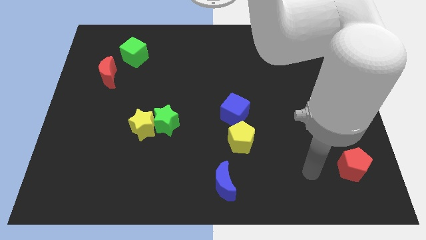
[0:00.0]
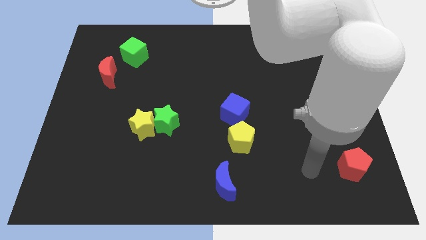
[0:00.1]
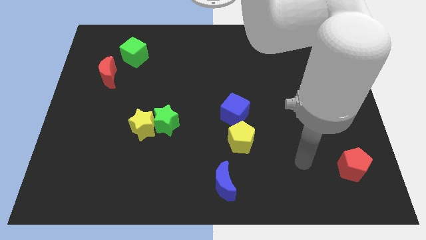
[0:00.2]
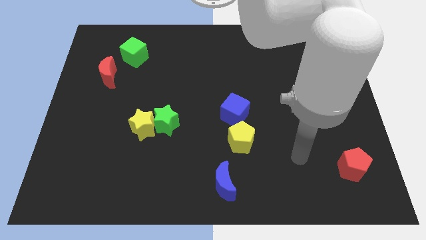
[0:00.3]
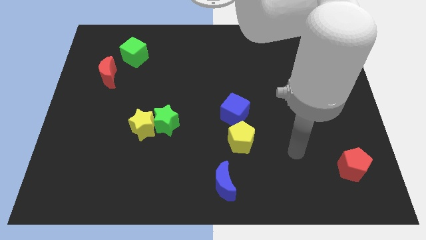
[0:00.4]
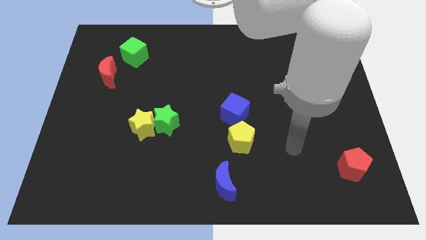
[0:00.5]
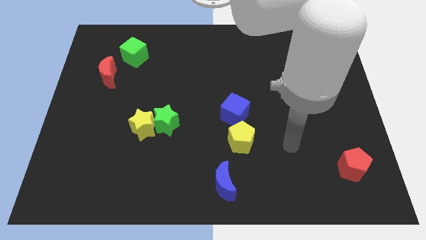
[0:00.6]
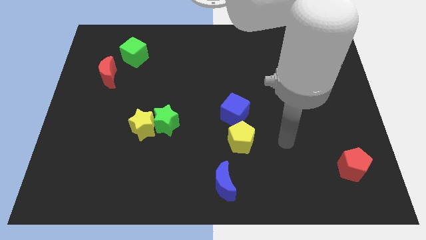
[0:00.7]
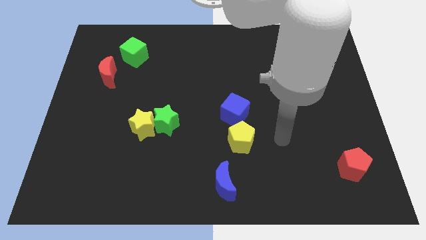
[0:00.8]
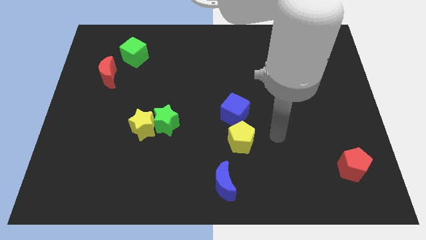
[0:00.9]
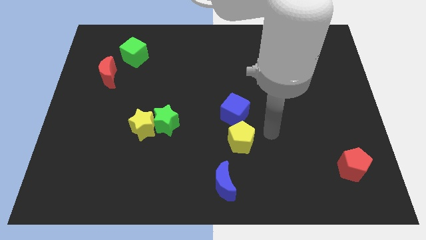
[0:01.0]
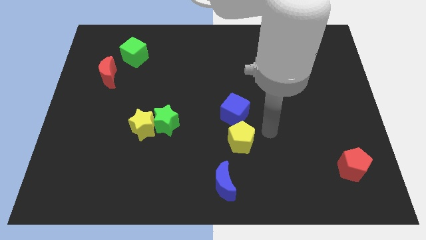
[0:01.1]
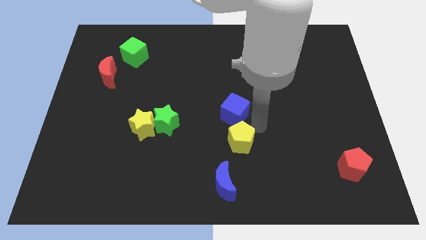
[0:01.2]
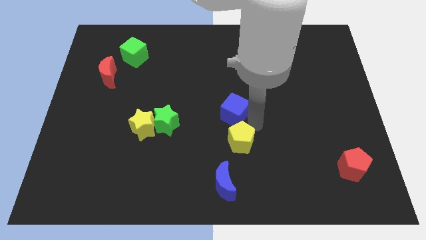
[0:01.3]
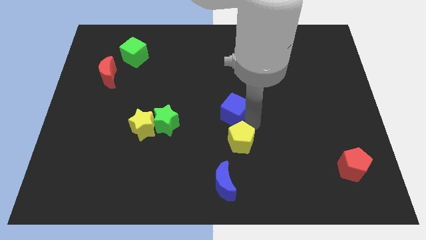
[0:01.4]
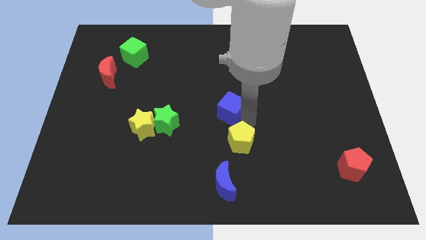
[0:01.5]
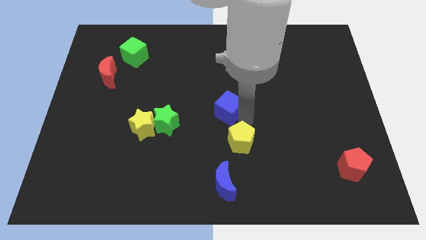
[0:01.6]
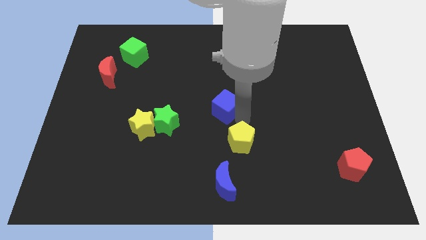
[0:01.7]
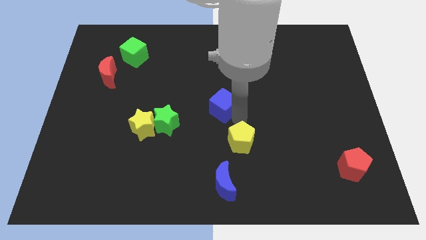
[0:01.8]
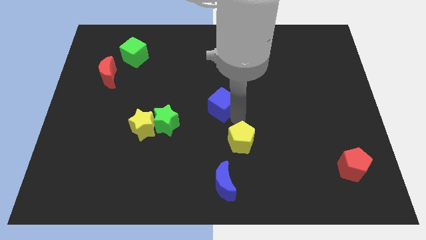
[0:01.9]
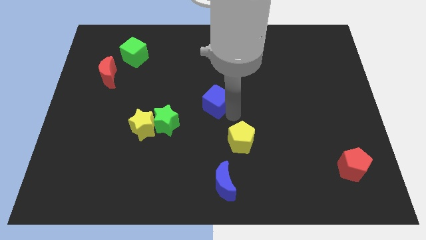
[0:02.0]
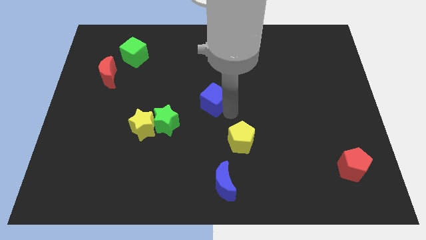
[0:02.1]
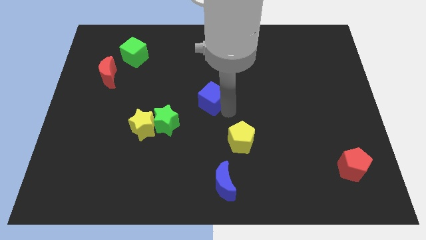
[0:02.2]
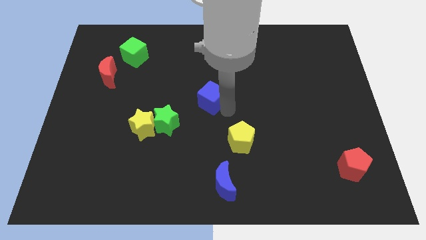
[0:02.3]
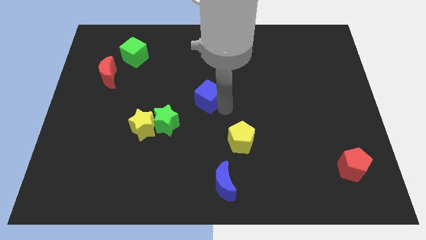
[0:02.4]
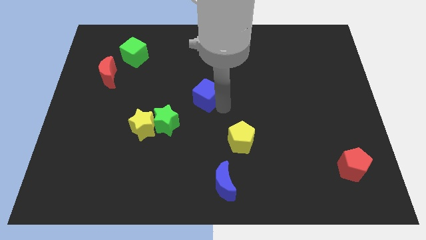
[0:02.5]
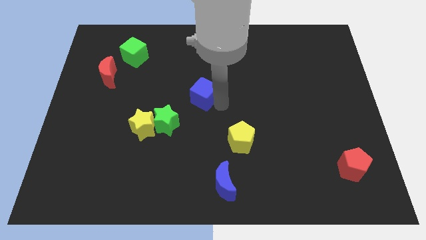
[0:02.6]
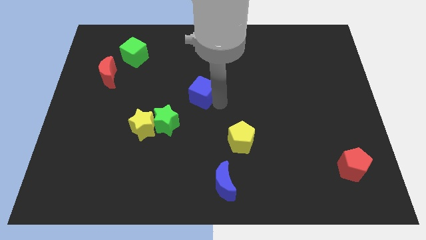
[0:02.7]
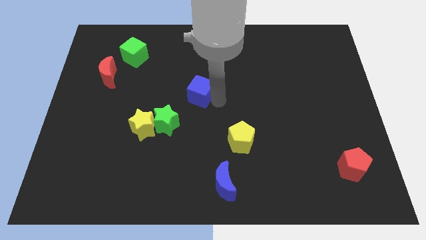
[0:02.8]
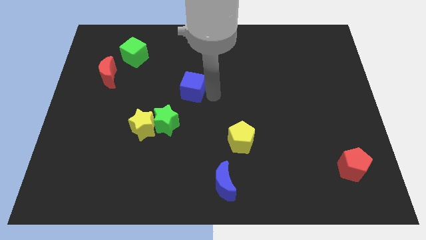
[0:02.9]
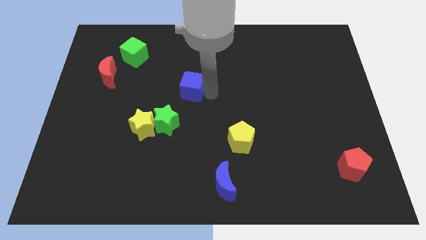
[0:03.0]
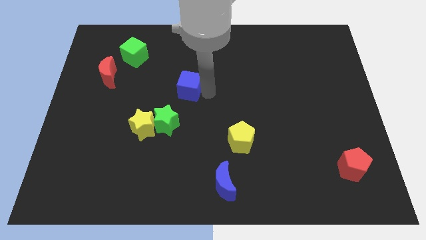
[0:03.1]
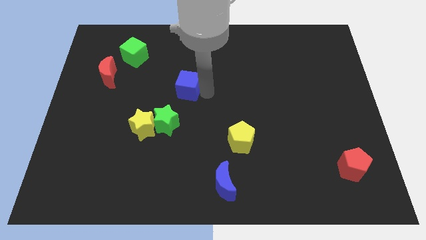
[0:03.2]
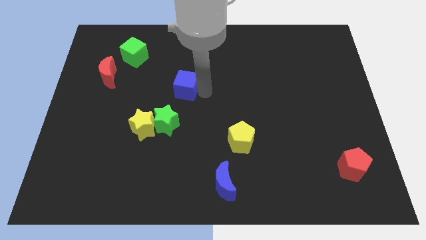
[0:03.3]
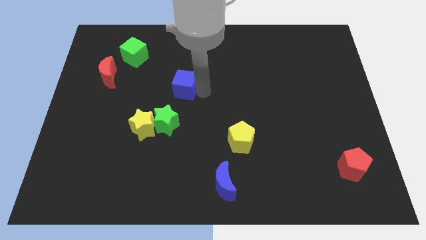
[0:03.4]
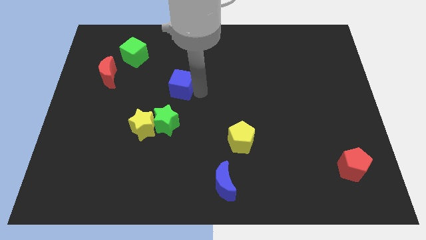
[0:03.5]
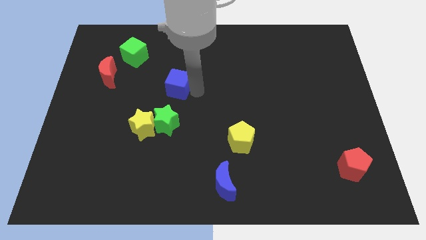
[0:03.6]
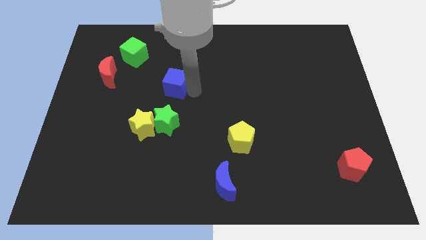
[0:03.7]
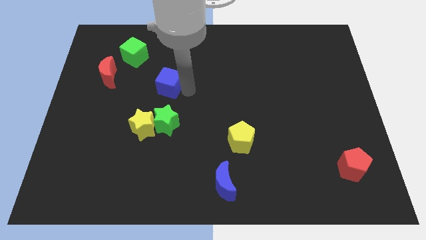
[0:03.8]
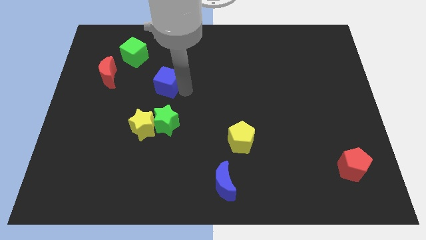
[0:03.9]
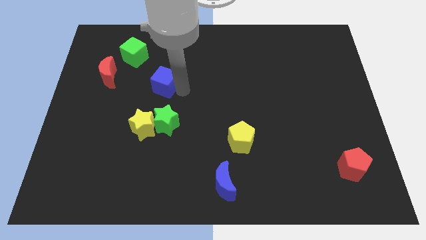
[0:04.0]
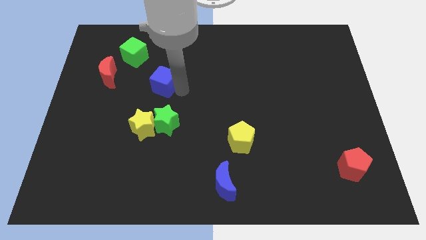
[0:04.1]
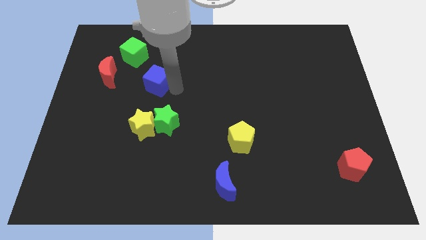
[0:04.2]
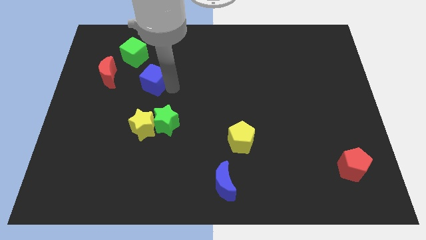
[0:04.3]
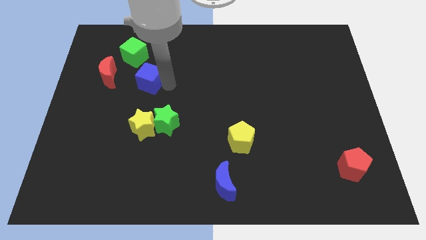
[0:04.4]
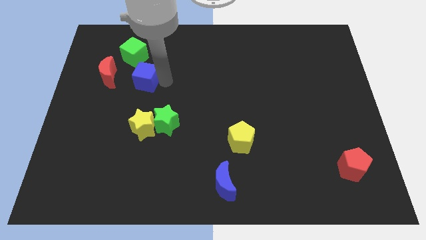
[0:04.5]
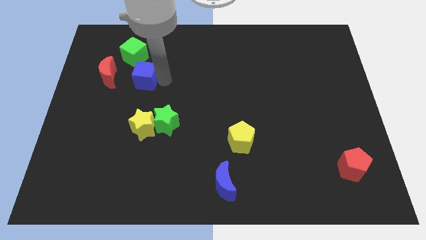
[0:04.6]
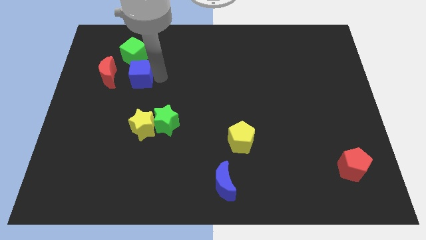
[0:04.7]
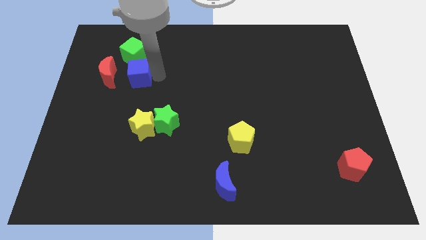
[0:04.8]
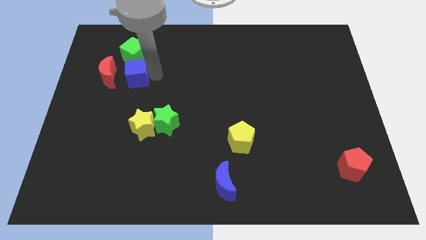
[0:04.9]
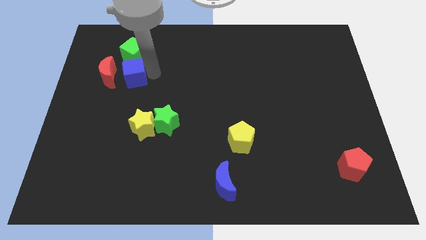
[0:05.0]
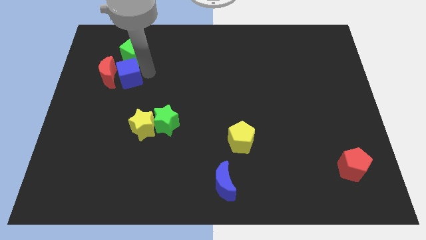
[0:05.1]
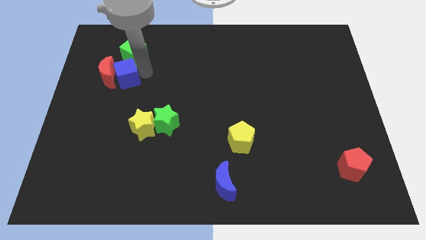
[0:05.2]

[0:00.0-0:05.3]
slide the blue cube next to the red moon

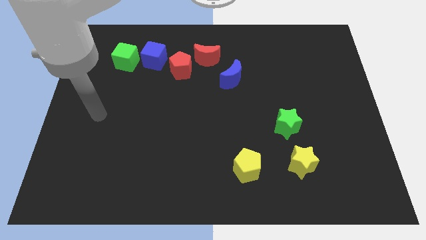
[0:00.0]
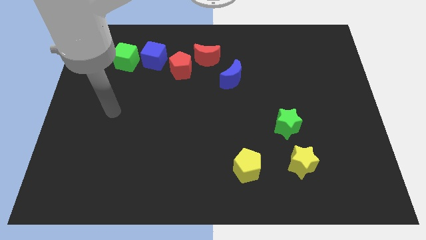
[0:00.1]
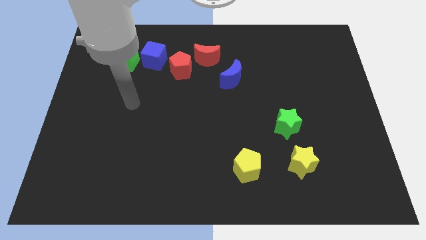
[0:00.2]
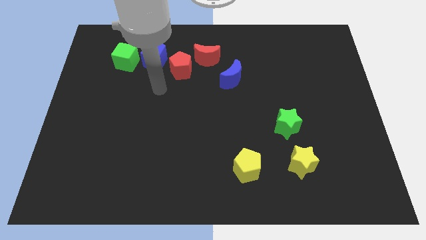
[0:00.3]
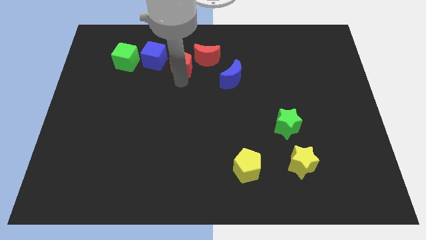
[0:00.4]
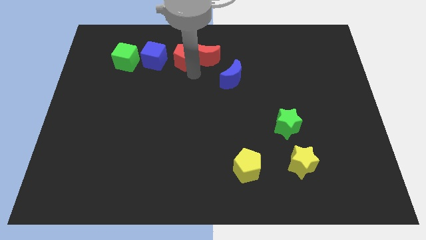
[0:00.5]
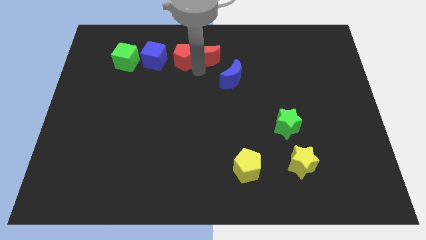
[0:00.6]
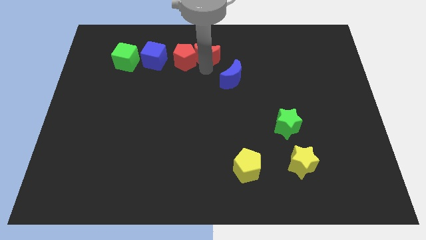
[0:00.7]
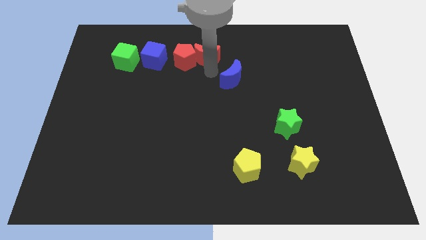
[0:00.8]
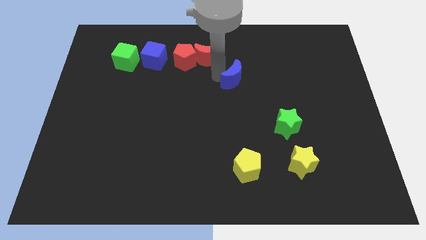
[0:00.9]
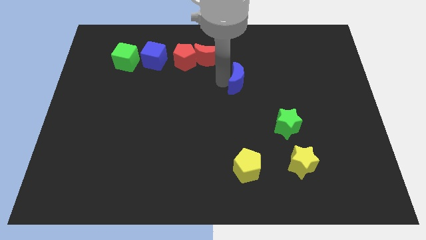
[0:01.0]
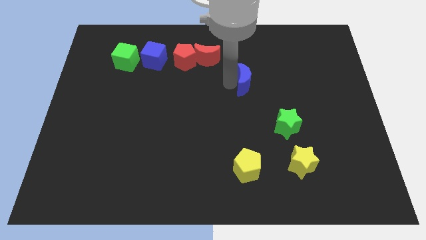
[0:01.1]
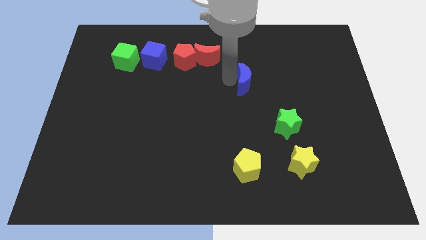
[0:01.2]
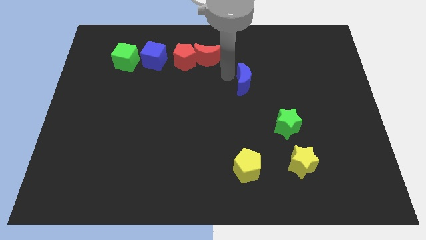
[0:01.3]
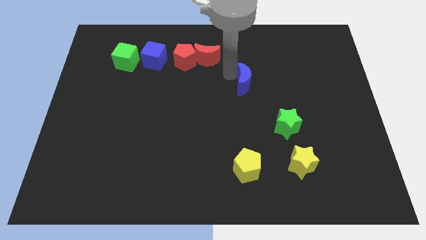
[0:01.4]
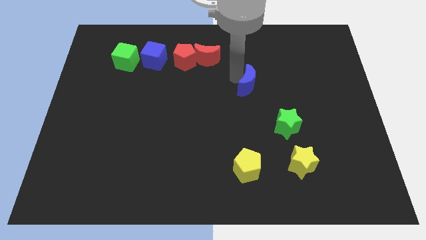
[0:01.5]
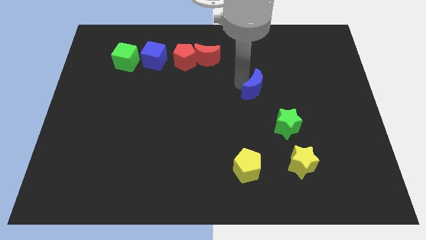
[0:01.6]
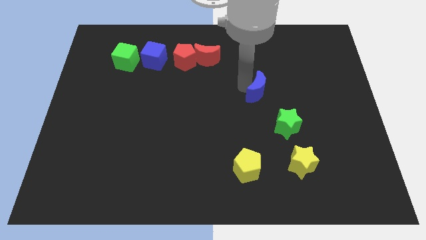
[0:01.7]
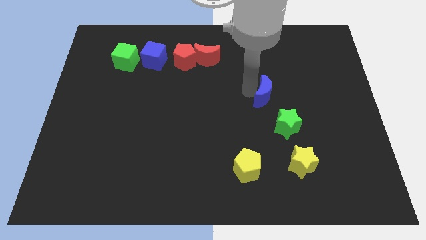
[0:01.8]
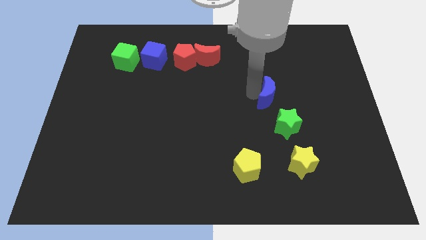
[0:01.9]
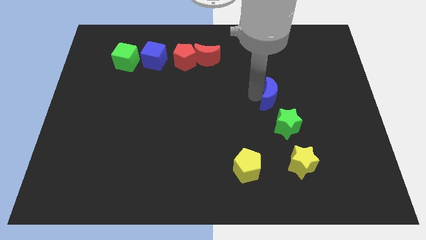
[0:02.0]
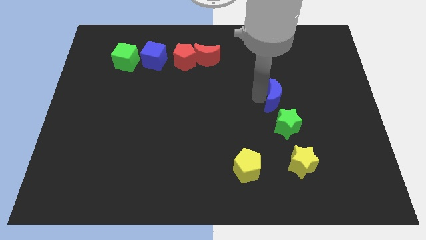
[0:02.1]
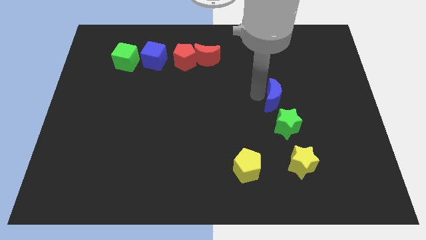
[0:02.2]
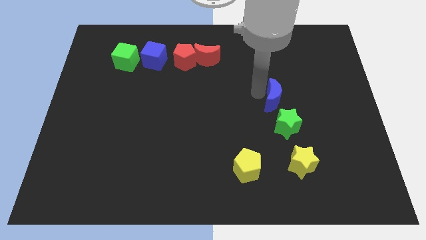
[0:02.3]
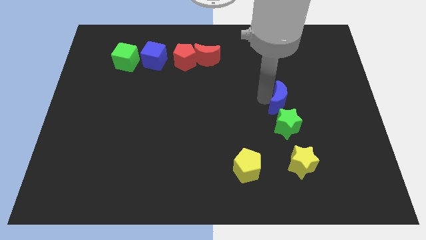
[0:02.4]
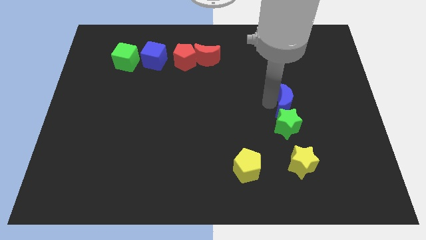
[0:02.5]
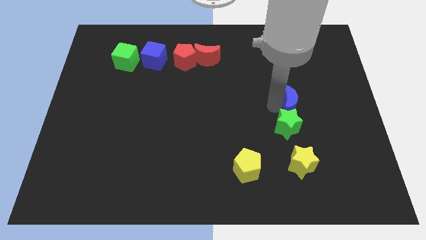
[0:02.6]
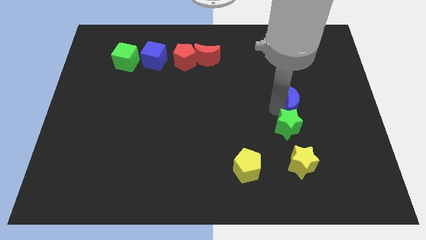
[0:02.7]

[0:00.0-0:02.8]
move the blue moon towards the green star

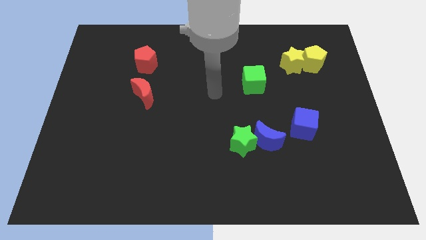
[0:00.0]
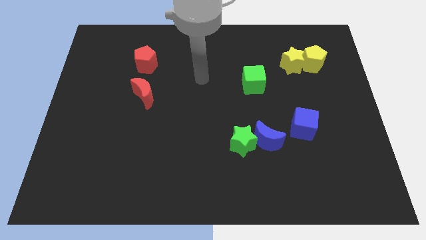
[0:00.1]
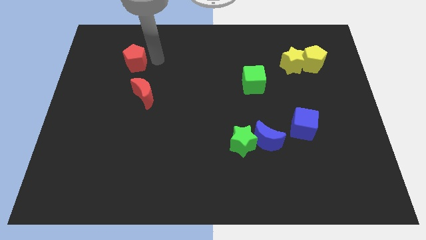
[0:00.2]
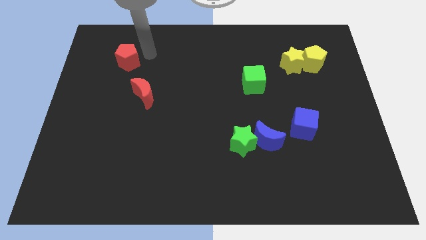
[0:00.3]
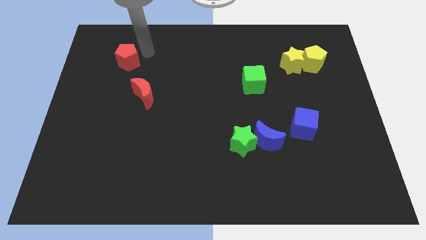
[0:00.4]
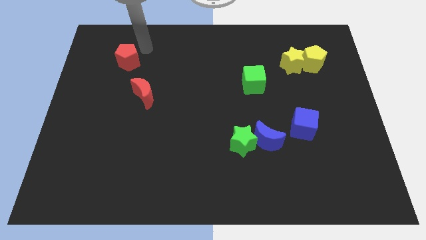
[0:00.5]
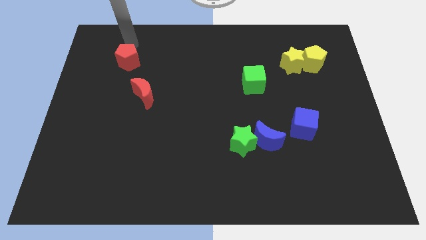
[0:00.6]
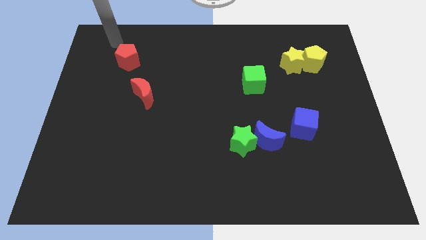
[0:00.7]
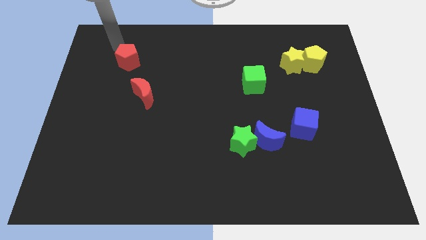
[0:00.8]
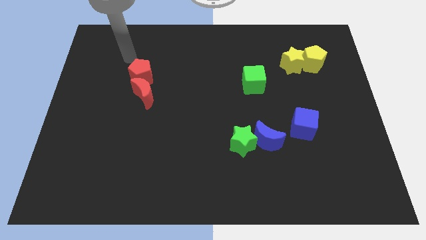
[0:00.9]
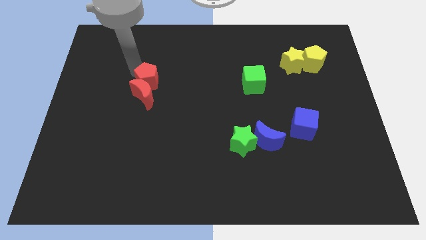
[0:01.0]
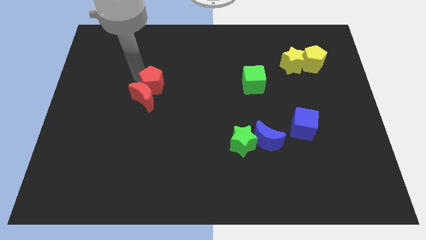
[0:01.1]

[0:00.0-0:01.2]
slide the red pentagon to the red moon
